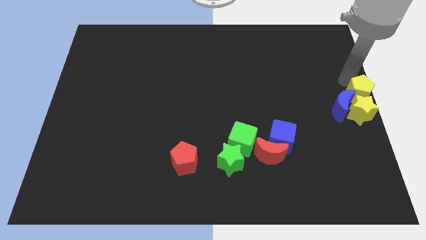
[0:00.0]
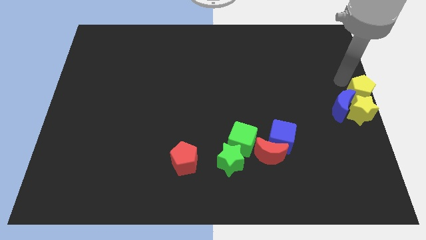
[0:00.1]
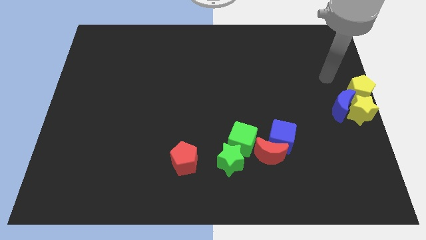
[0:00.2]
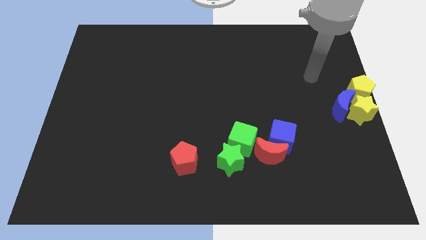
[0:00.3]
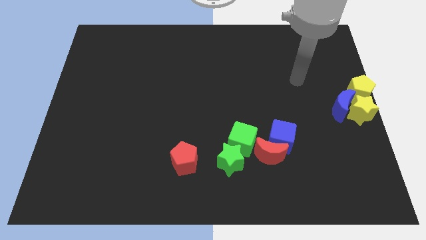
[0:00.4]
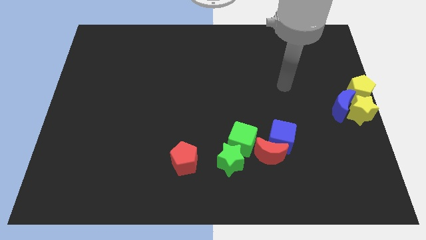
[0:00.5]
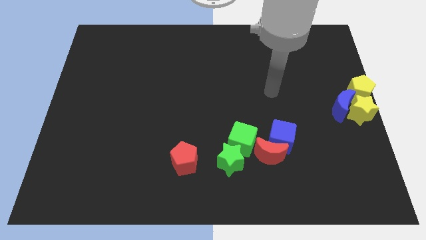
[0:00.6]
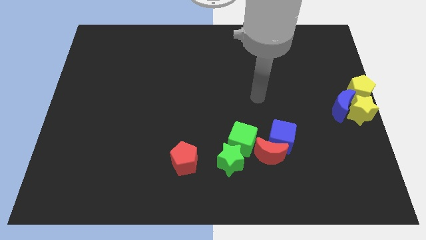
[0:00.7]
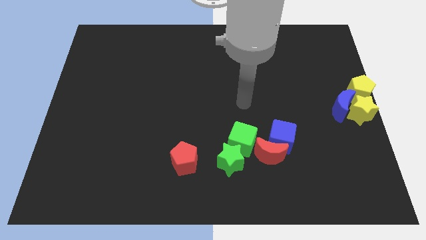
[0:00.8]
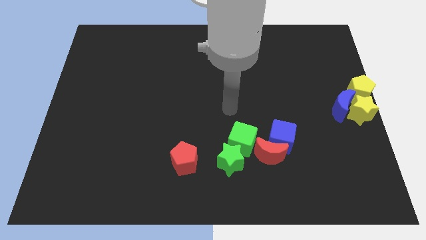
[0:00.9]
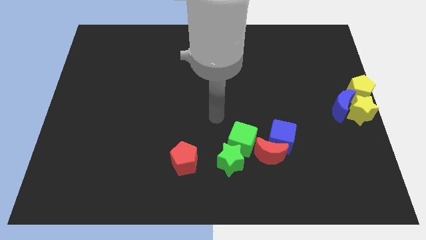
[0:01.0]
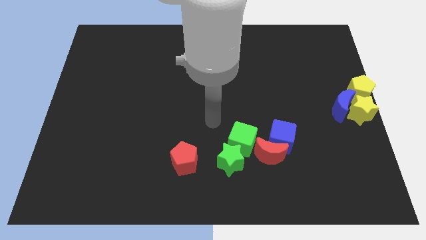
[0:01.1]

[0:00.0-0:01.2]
move the arm away from the yellow pentagon

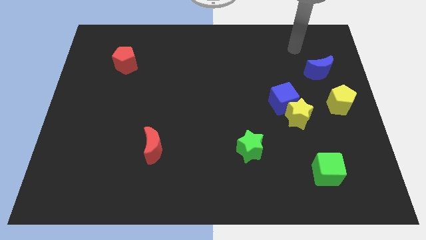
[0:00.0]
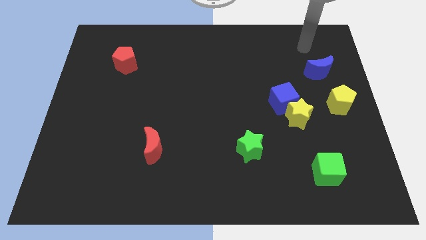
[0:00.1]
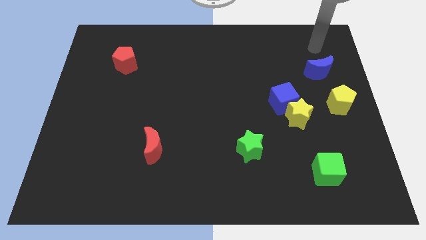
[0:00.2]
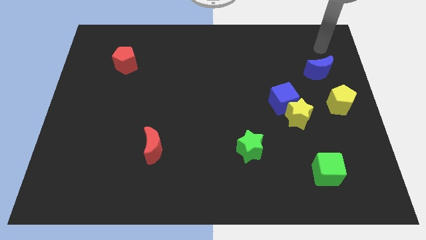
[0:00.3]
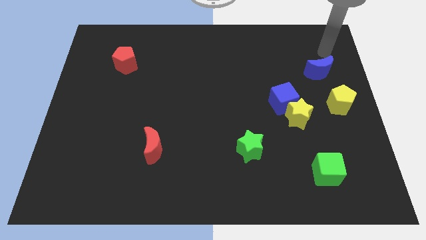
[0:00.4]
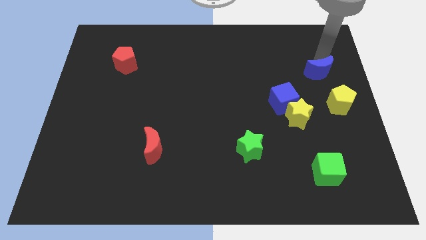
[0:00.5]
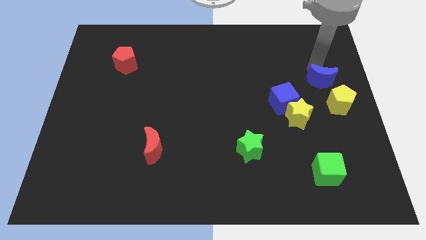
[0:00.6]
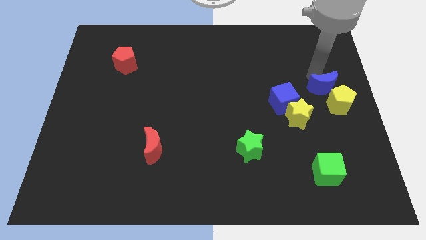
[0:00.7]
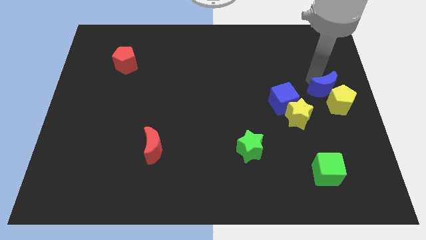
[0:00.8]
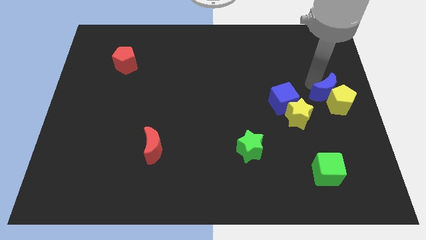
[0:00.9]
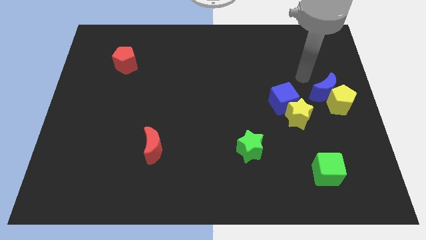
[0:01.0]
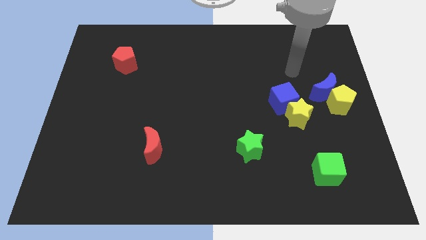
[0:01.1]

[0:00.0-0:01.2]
push blue crescent towards yellow pentagon

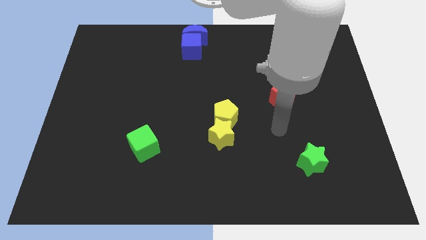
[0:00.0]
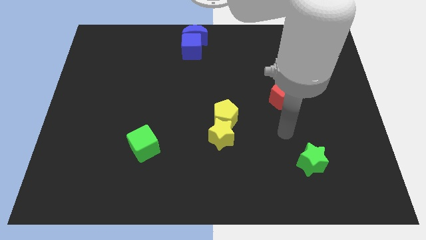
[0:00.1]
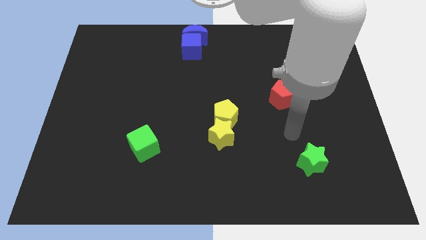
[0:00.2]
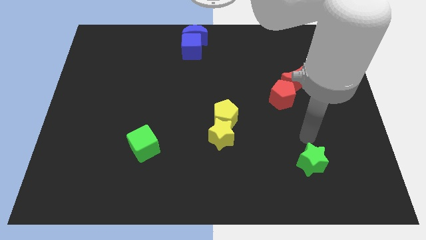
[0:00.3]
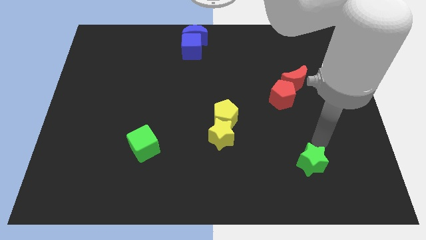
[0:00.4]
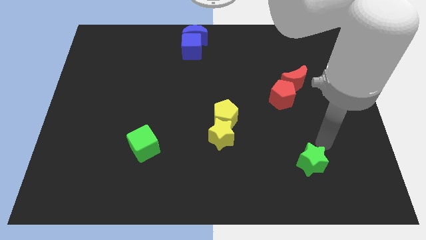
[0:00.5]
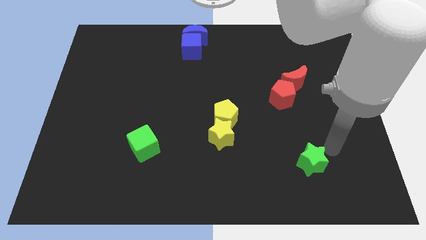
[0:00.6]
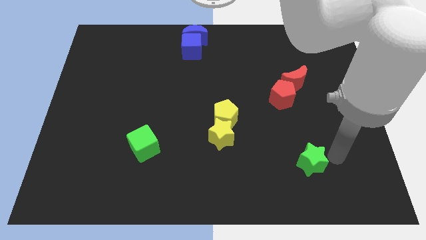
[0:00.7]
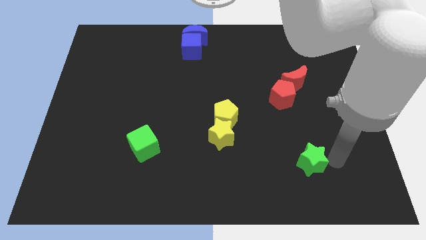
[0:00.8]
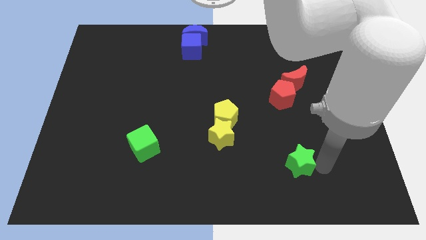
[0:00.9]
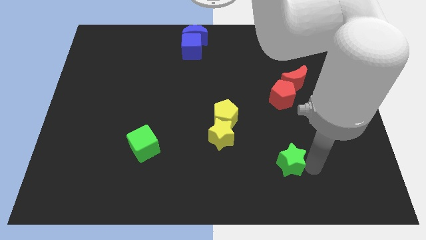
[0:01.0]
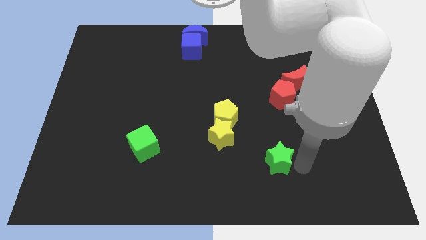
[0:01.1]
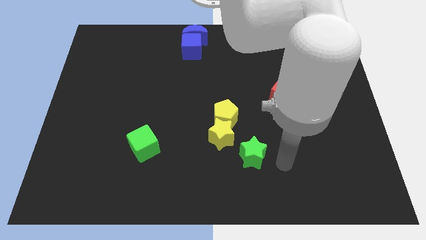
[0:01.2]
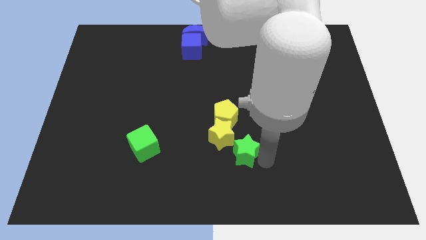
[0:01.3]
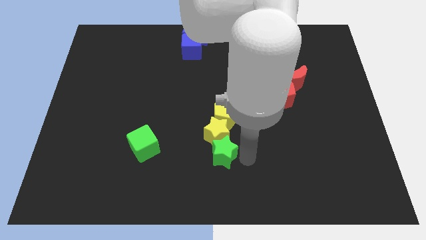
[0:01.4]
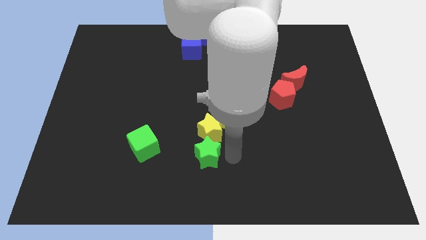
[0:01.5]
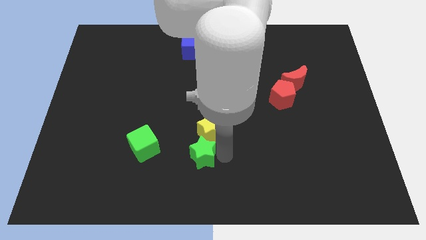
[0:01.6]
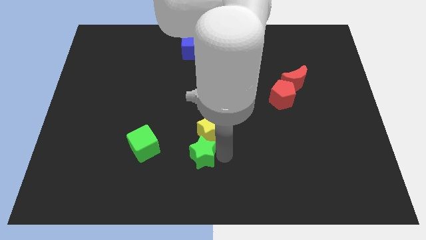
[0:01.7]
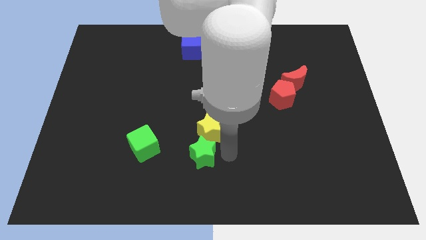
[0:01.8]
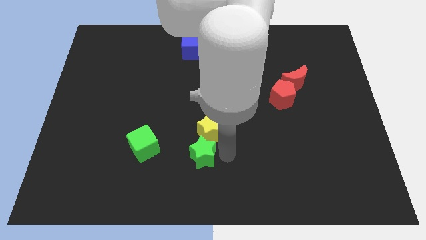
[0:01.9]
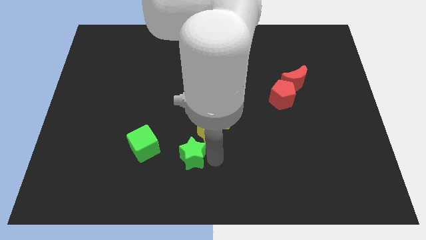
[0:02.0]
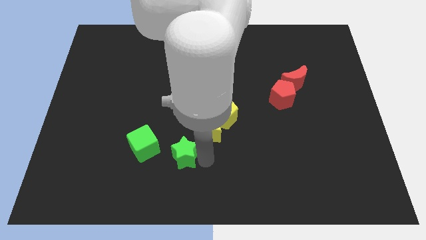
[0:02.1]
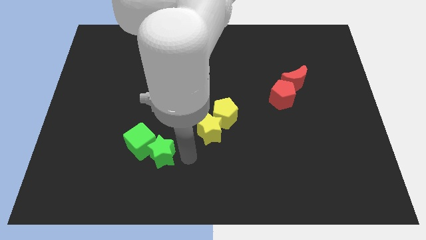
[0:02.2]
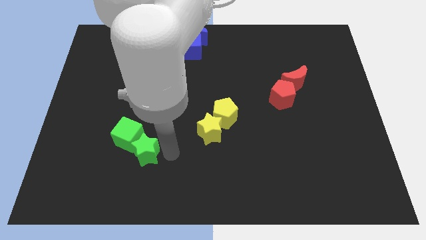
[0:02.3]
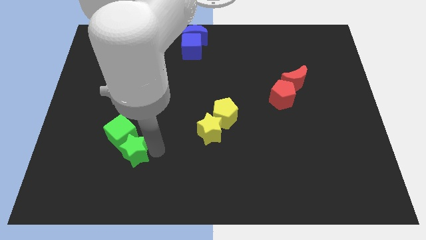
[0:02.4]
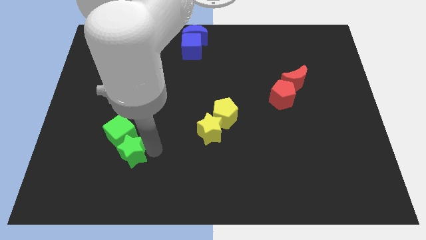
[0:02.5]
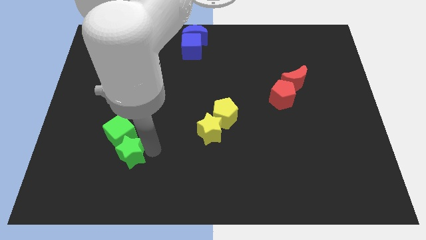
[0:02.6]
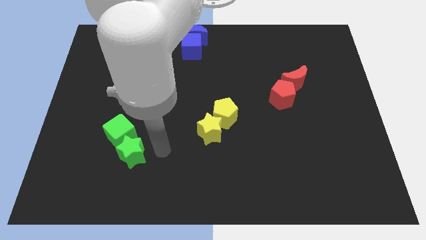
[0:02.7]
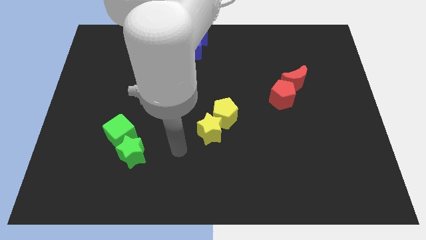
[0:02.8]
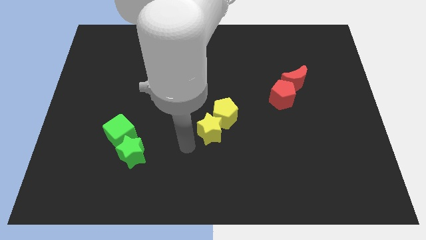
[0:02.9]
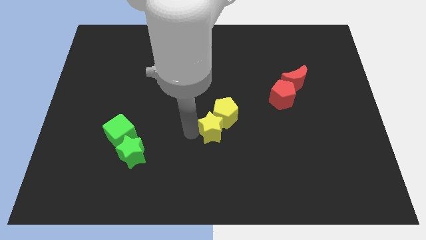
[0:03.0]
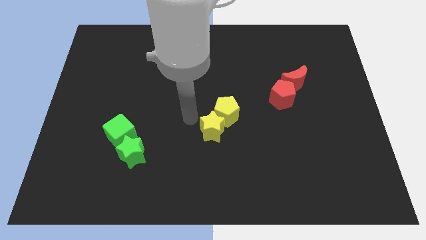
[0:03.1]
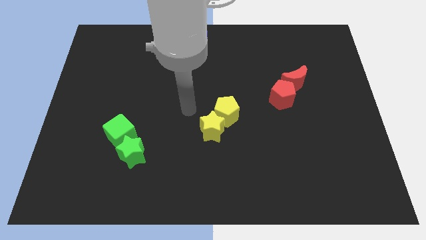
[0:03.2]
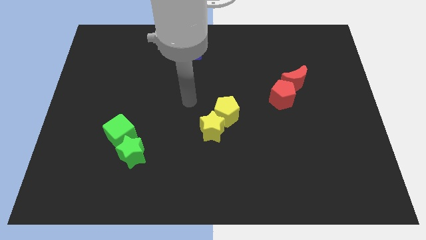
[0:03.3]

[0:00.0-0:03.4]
push the green star into the green cube

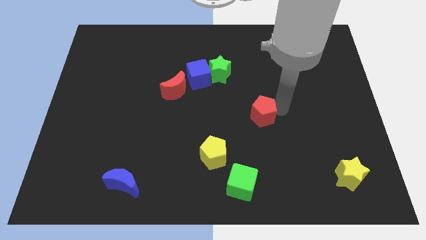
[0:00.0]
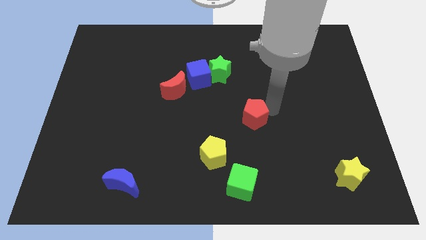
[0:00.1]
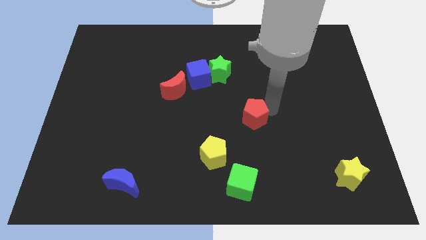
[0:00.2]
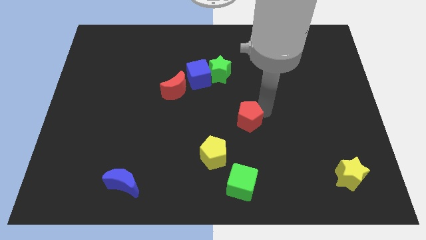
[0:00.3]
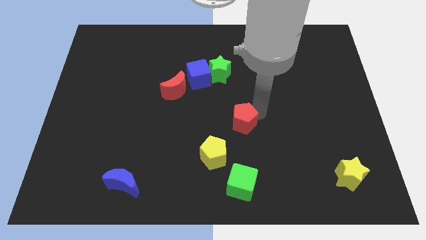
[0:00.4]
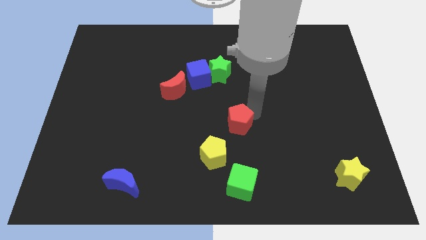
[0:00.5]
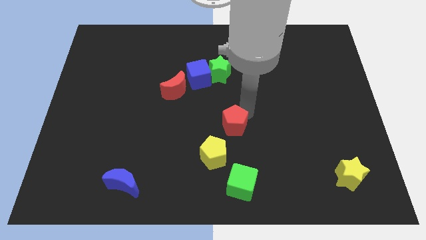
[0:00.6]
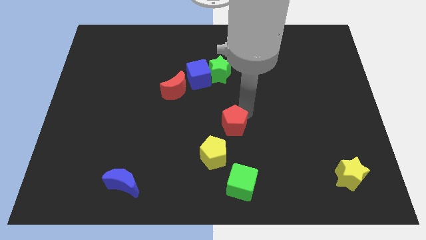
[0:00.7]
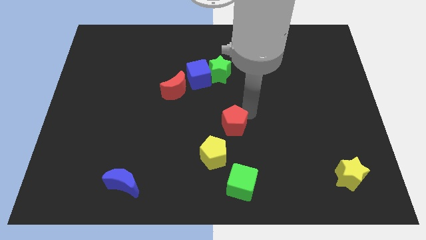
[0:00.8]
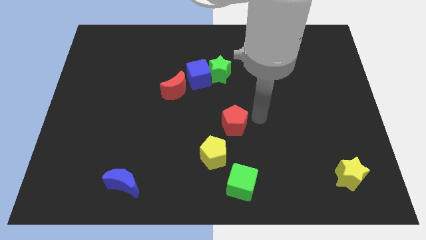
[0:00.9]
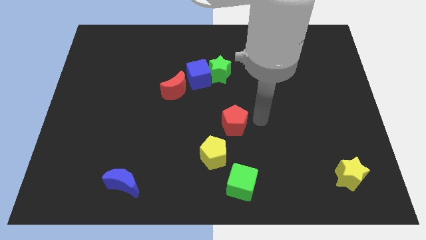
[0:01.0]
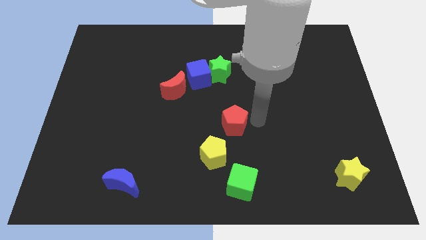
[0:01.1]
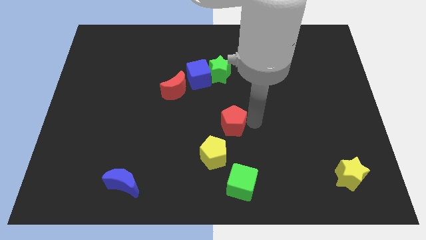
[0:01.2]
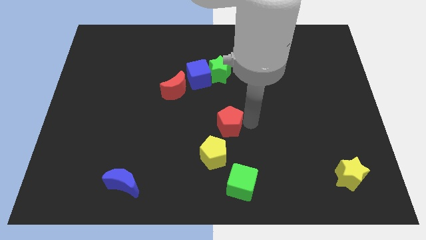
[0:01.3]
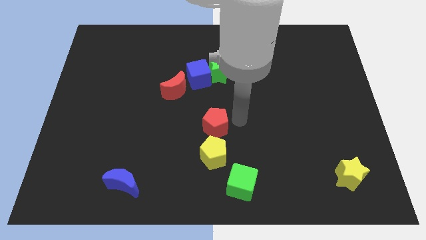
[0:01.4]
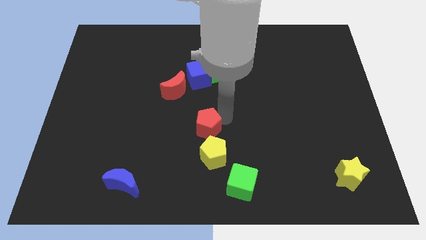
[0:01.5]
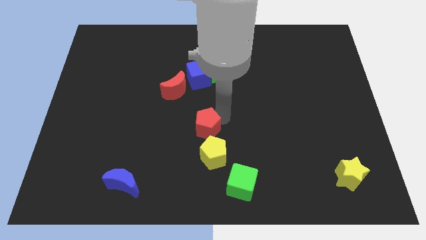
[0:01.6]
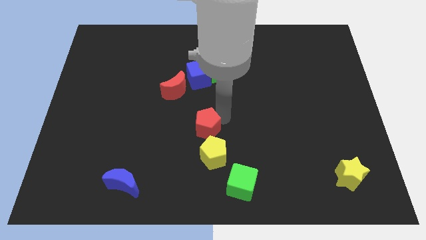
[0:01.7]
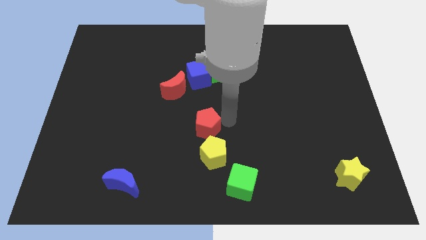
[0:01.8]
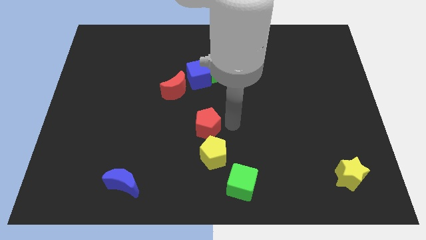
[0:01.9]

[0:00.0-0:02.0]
move the red pentagon to the top side of the yellow pentagon

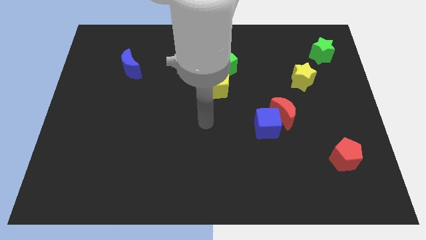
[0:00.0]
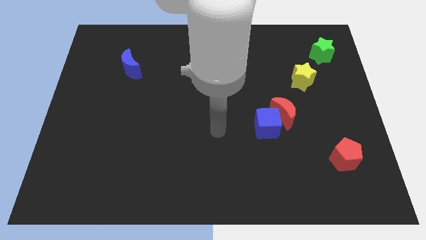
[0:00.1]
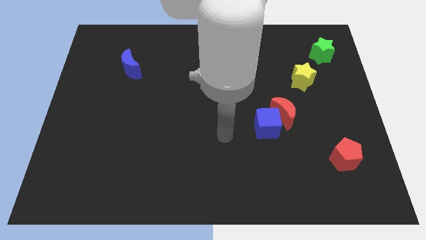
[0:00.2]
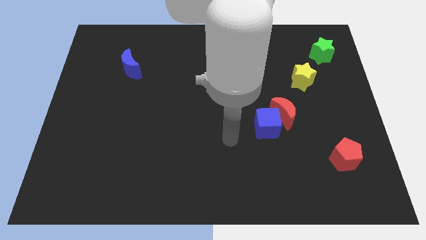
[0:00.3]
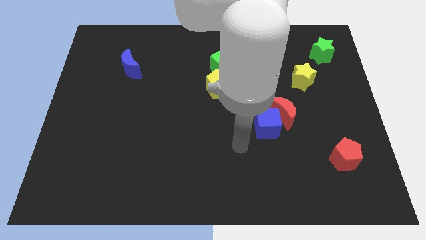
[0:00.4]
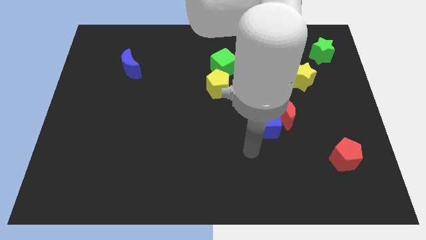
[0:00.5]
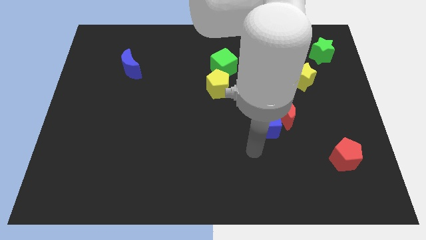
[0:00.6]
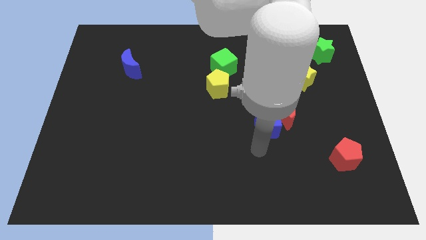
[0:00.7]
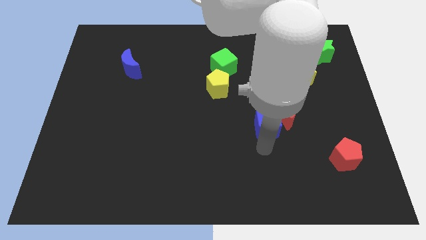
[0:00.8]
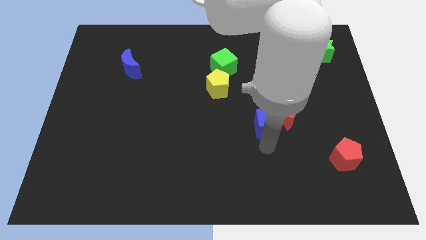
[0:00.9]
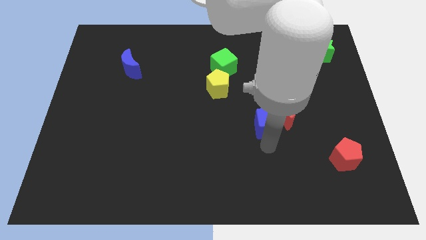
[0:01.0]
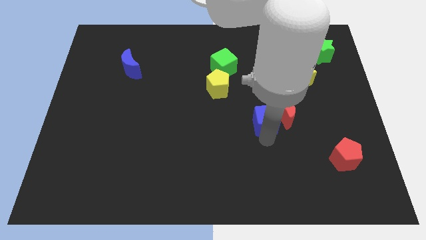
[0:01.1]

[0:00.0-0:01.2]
touch the bottom side of the blue cube
